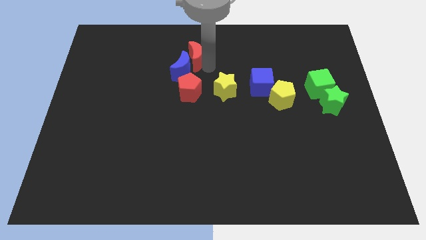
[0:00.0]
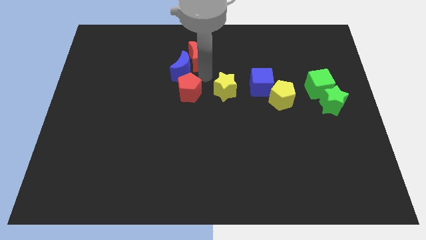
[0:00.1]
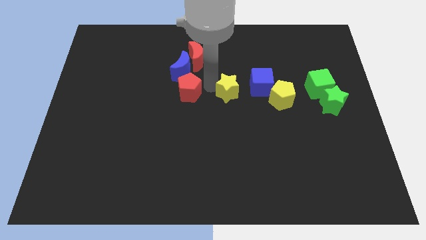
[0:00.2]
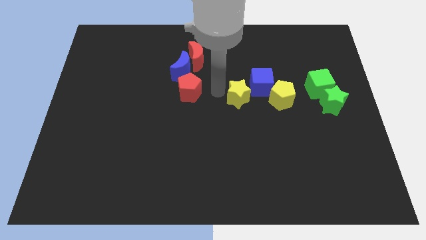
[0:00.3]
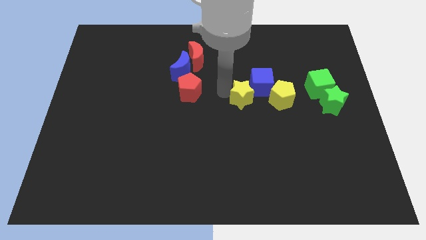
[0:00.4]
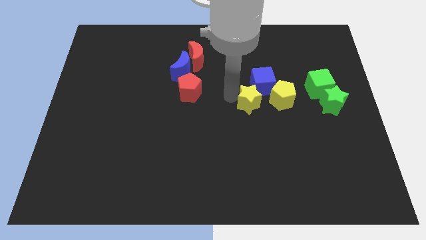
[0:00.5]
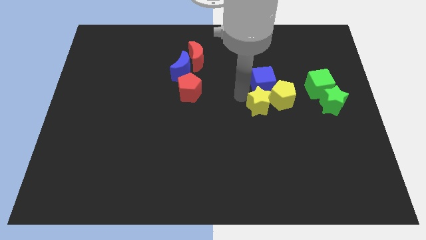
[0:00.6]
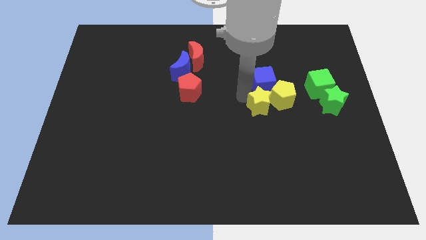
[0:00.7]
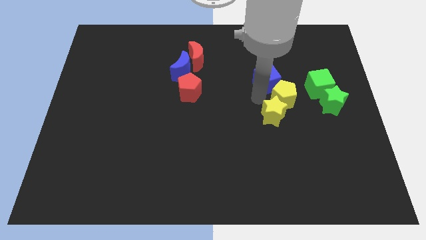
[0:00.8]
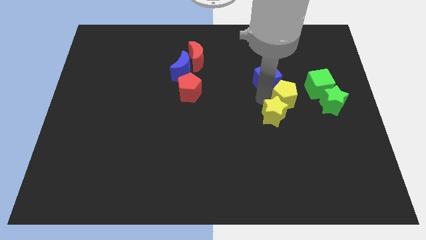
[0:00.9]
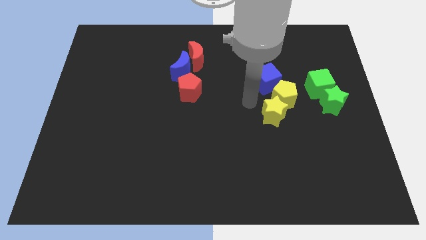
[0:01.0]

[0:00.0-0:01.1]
push the yellow star close to the yellow pentagon

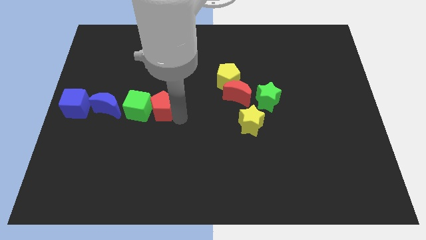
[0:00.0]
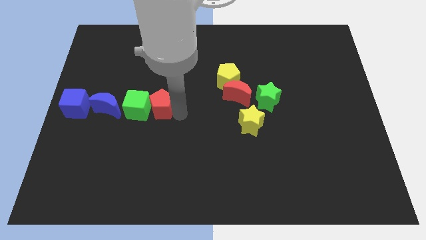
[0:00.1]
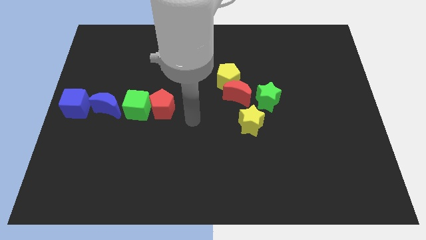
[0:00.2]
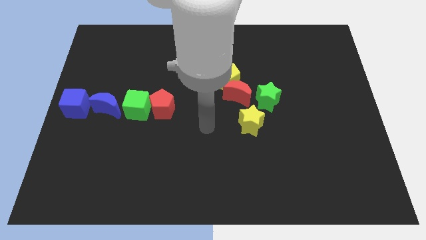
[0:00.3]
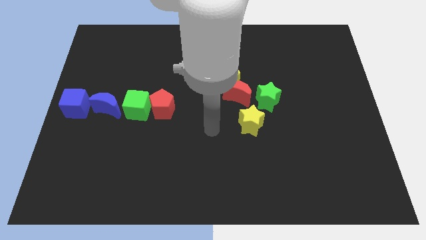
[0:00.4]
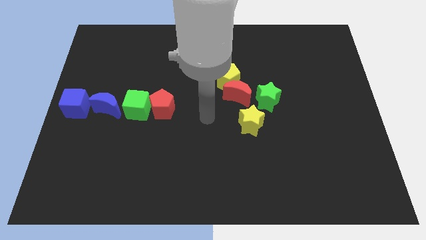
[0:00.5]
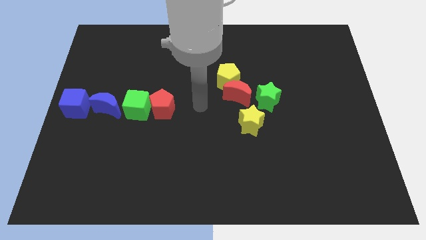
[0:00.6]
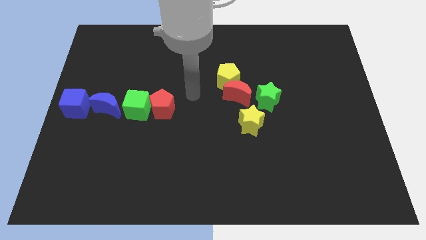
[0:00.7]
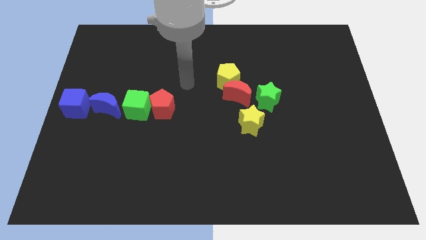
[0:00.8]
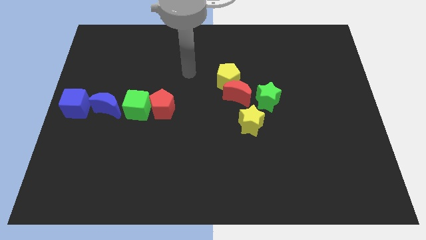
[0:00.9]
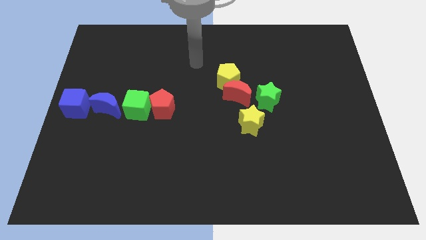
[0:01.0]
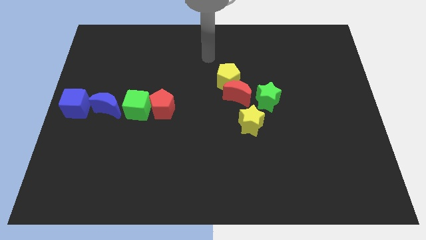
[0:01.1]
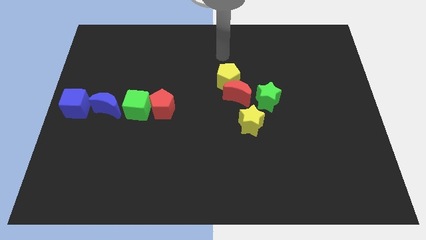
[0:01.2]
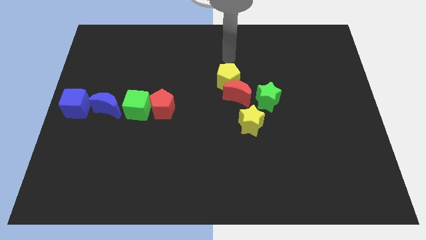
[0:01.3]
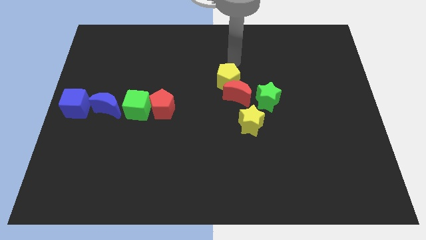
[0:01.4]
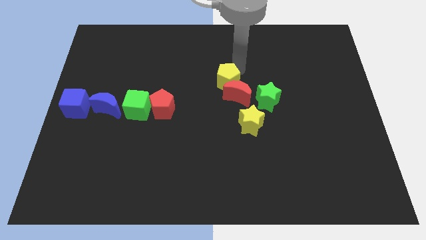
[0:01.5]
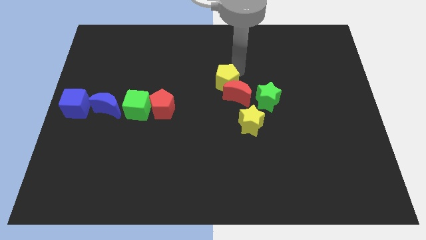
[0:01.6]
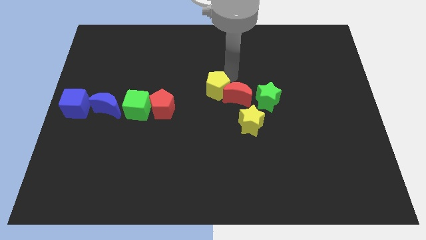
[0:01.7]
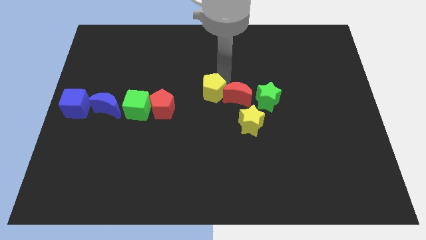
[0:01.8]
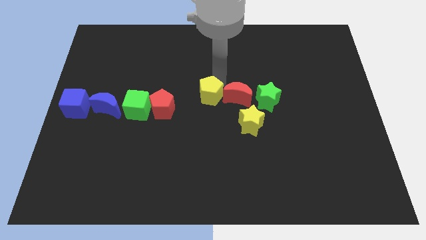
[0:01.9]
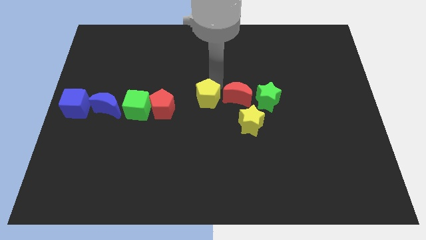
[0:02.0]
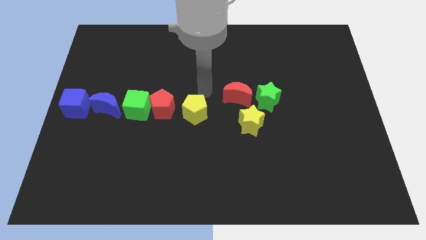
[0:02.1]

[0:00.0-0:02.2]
place the yellow pentagon to the right side of the red pentagon

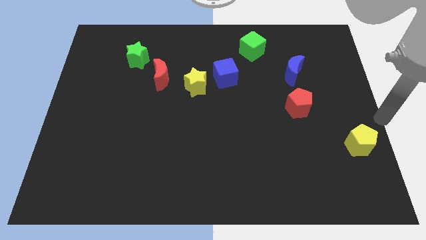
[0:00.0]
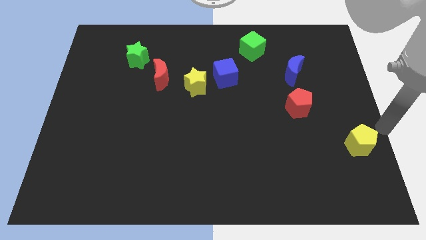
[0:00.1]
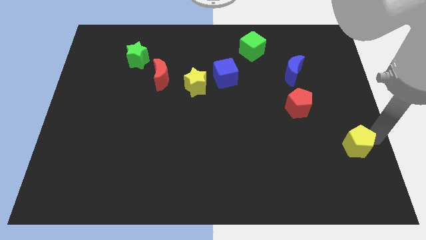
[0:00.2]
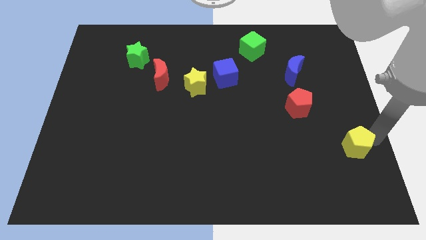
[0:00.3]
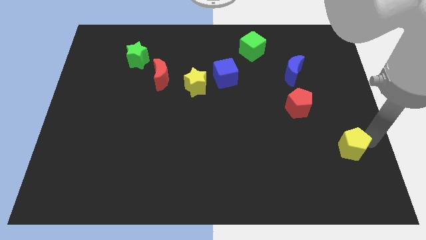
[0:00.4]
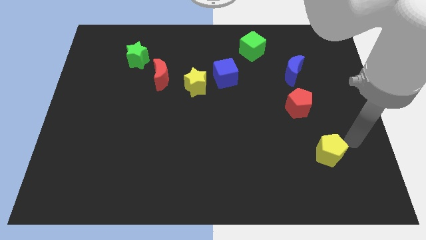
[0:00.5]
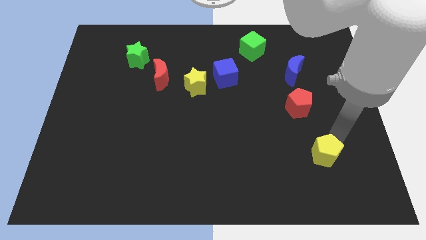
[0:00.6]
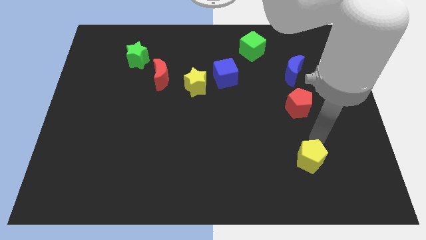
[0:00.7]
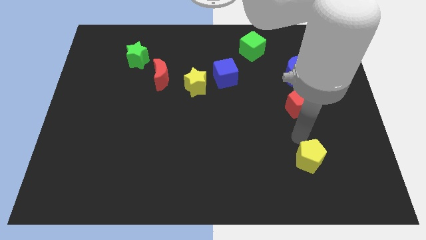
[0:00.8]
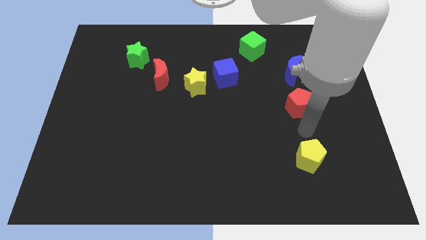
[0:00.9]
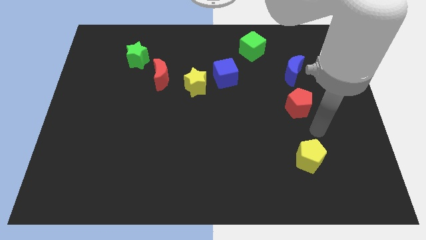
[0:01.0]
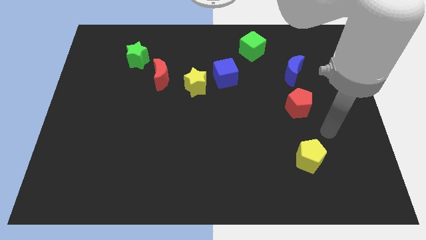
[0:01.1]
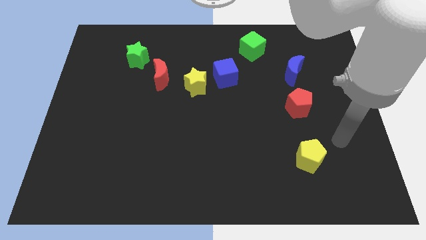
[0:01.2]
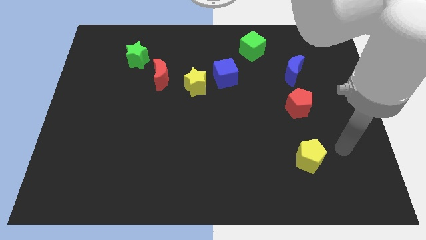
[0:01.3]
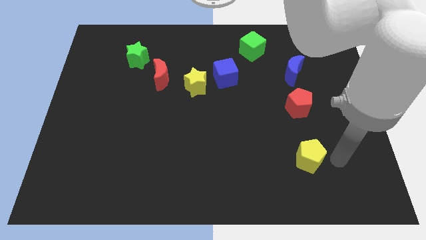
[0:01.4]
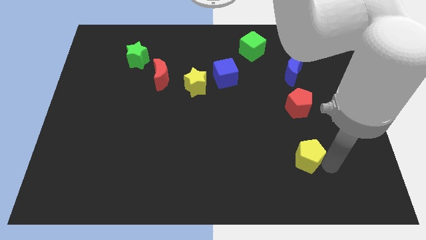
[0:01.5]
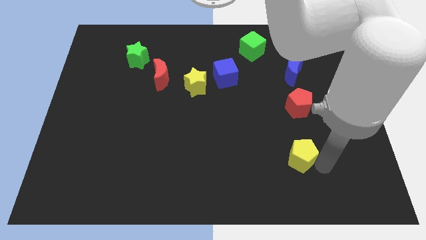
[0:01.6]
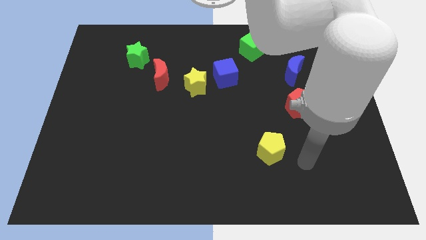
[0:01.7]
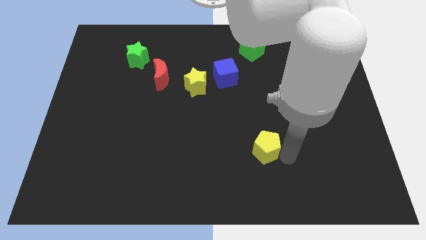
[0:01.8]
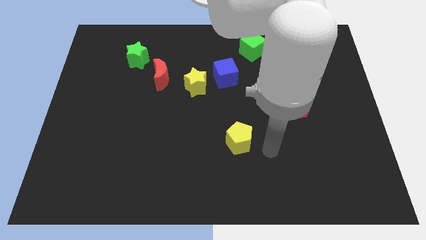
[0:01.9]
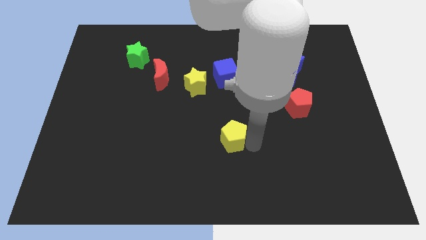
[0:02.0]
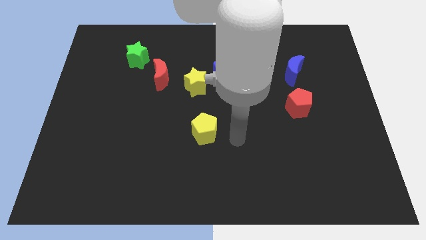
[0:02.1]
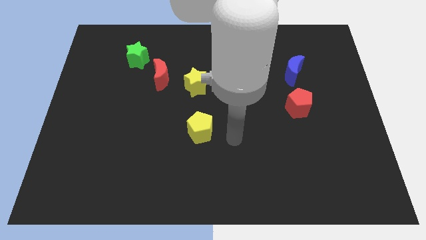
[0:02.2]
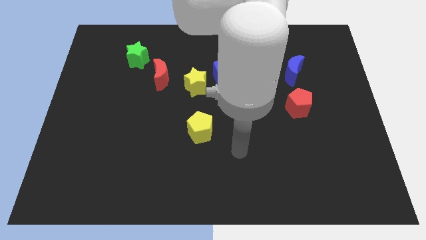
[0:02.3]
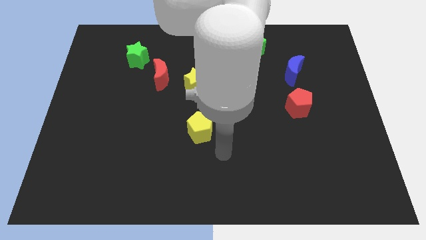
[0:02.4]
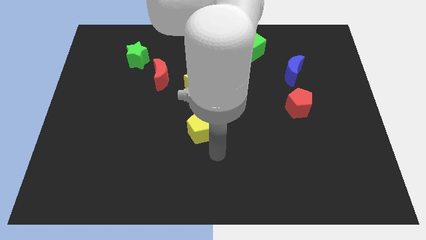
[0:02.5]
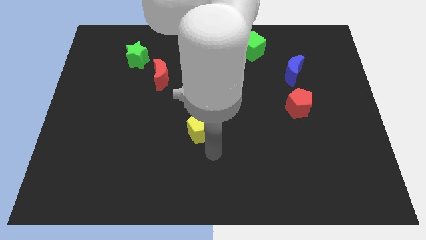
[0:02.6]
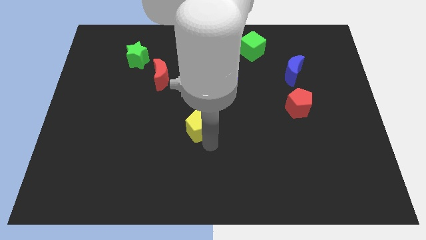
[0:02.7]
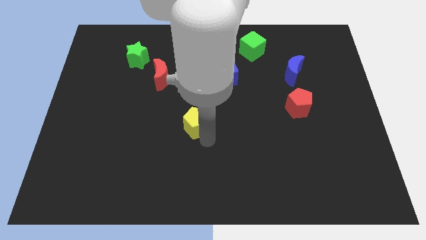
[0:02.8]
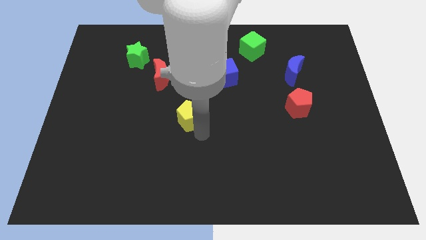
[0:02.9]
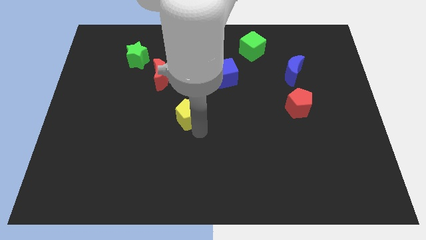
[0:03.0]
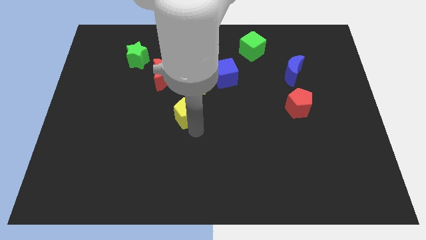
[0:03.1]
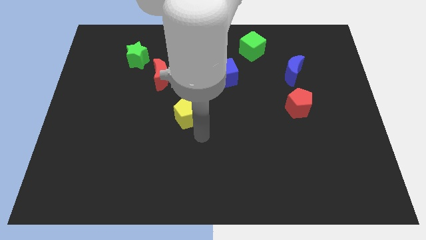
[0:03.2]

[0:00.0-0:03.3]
place the yellow pentagon below the yellow star

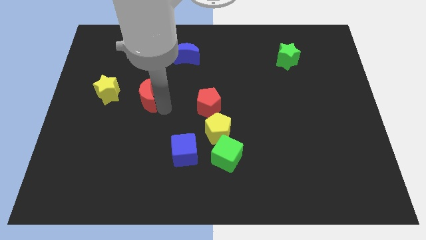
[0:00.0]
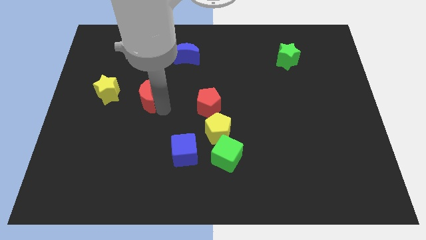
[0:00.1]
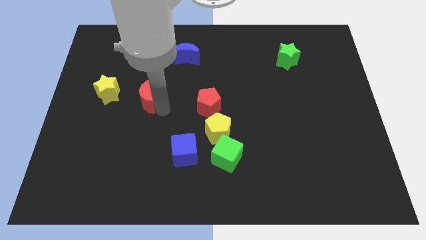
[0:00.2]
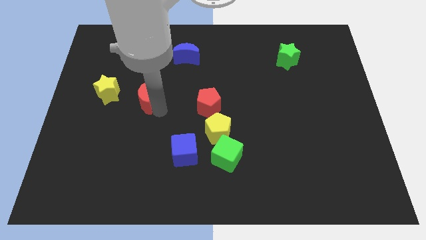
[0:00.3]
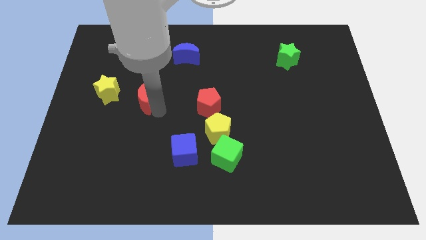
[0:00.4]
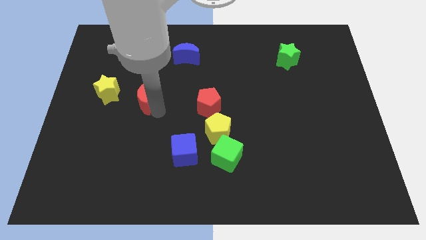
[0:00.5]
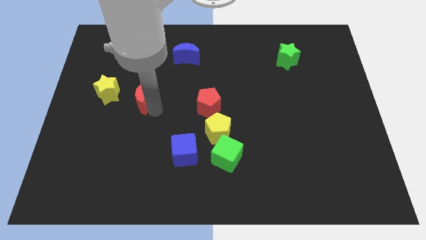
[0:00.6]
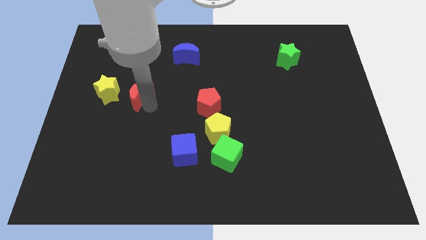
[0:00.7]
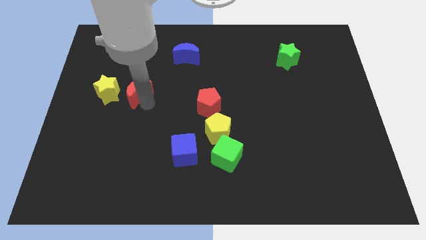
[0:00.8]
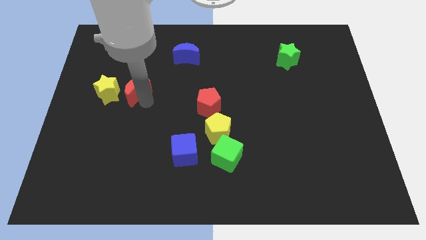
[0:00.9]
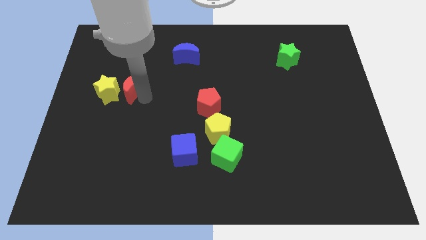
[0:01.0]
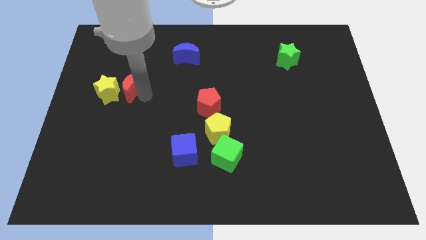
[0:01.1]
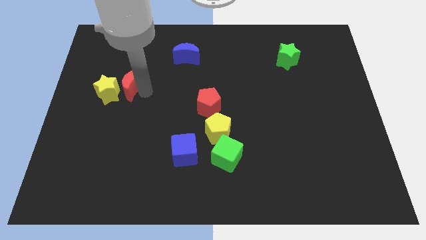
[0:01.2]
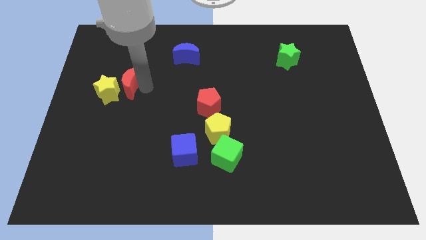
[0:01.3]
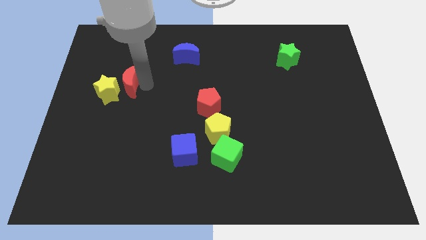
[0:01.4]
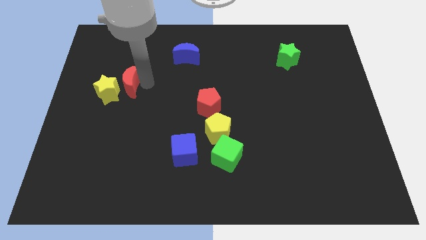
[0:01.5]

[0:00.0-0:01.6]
place the red crescent on the right side of the yellow star

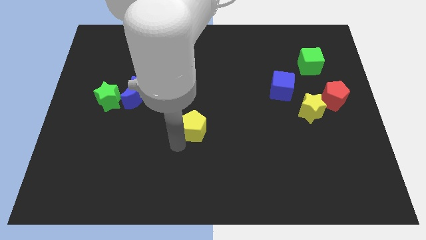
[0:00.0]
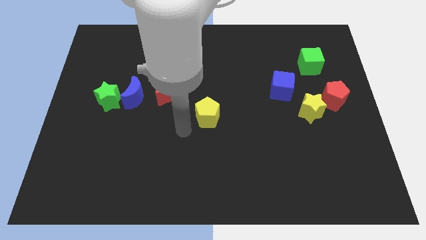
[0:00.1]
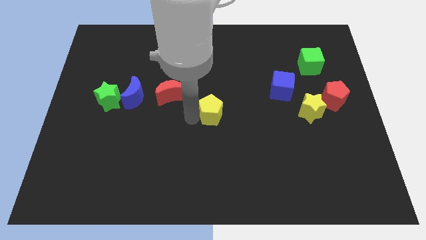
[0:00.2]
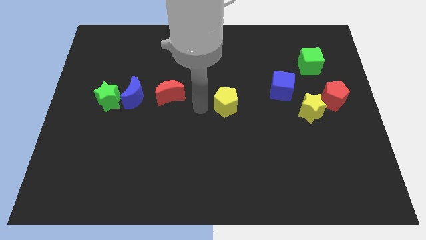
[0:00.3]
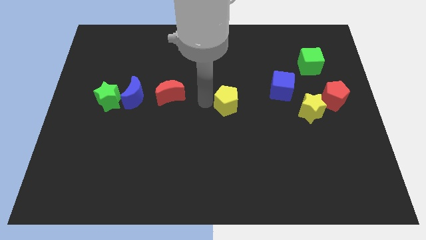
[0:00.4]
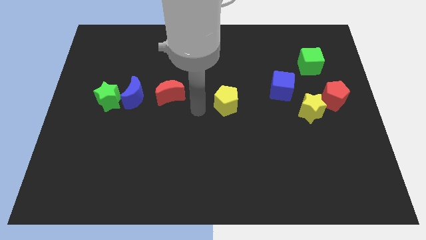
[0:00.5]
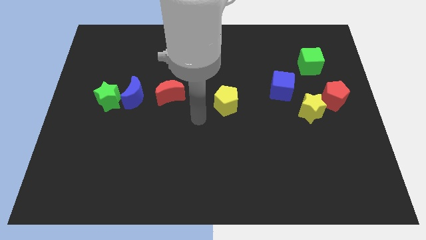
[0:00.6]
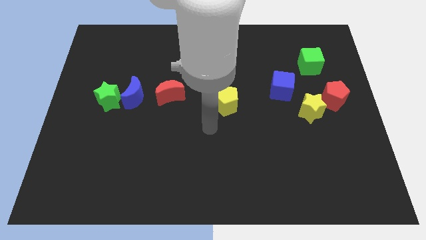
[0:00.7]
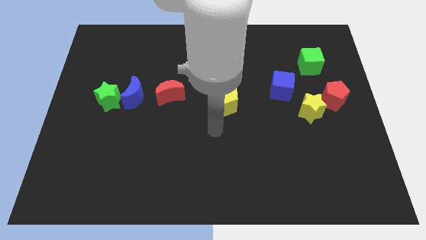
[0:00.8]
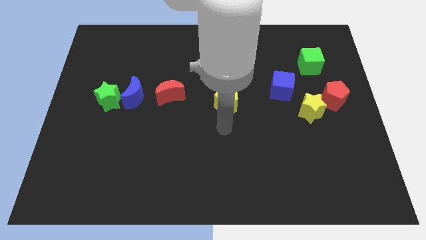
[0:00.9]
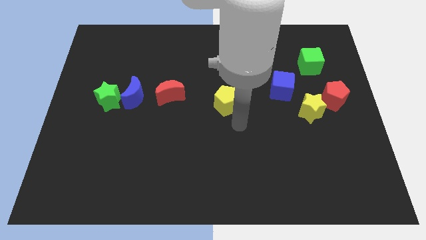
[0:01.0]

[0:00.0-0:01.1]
move yellow pentagon to the right of red moon
